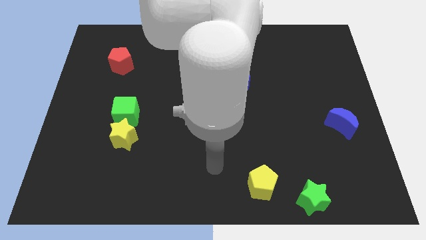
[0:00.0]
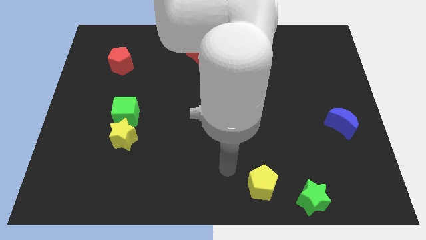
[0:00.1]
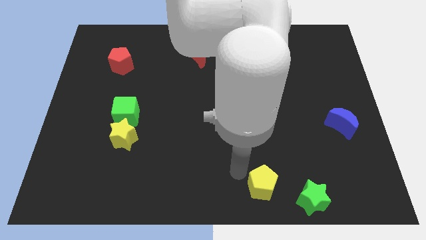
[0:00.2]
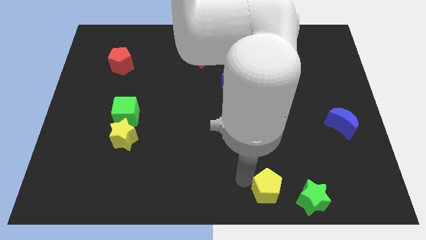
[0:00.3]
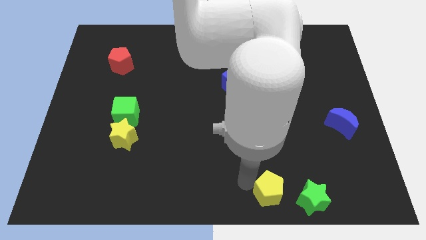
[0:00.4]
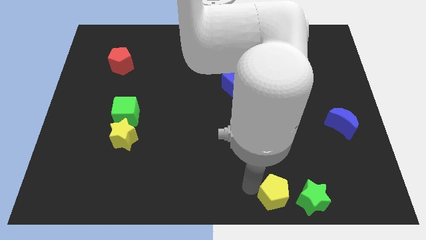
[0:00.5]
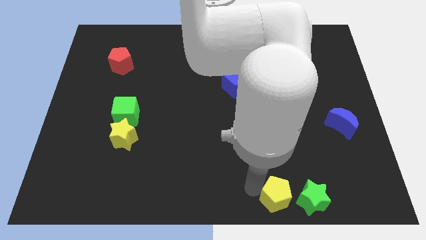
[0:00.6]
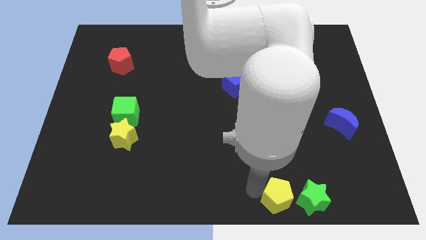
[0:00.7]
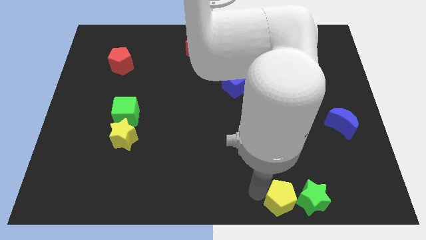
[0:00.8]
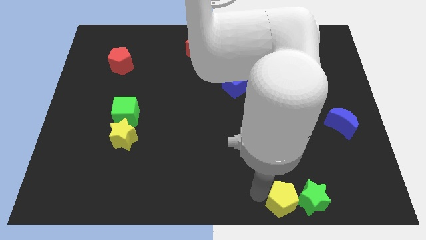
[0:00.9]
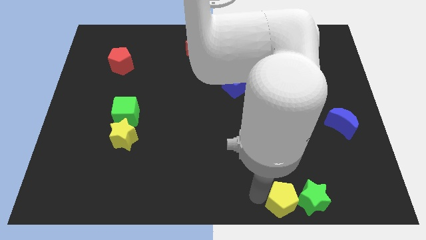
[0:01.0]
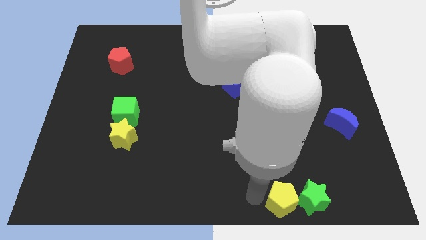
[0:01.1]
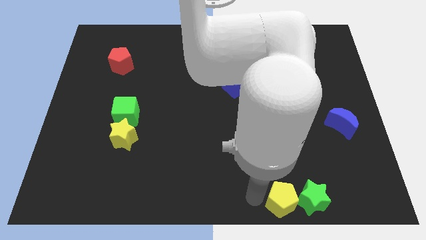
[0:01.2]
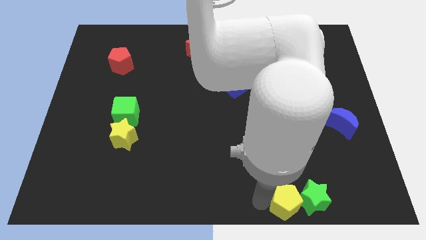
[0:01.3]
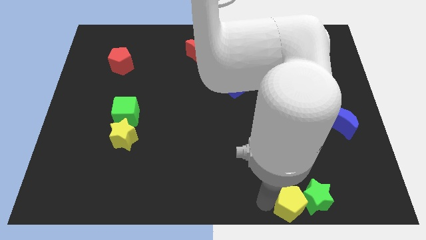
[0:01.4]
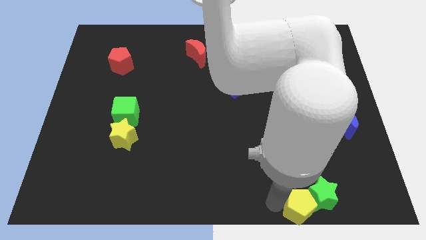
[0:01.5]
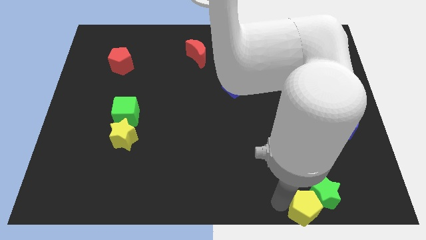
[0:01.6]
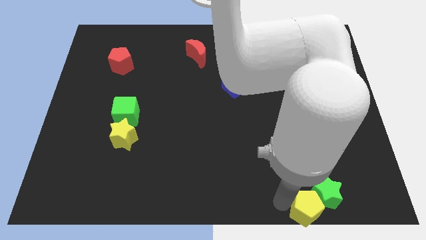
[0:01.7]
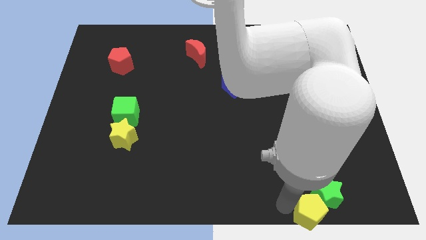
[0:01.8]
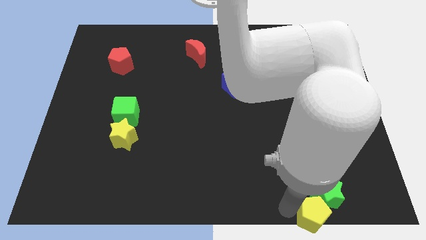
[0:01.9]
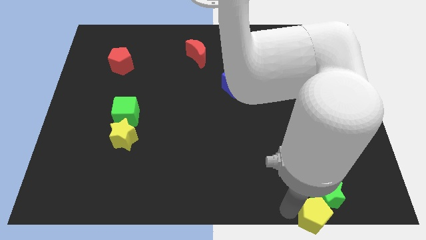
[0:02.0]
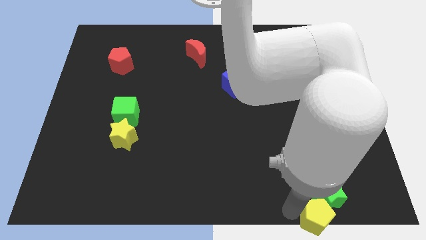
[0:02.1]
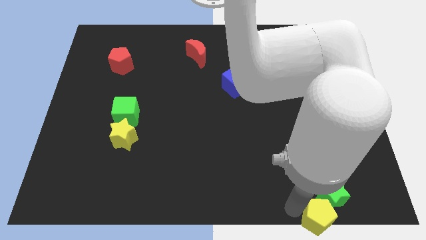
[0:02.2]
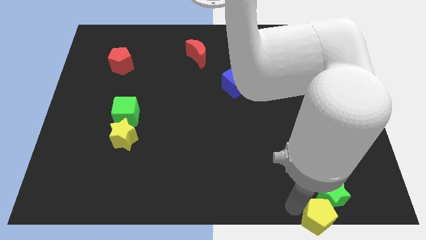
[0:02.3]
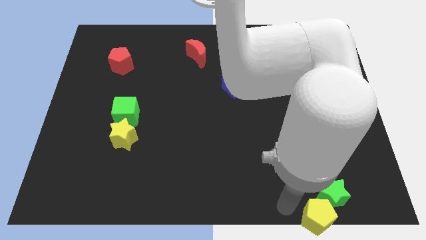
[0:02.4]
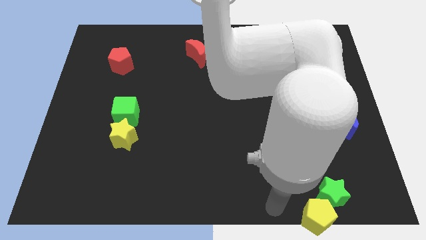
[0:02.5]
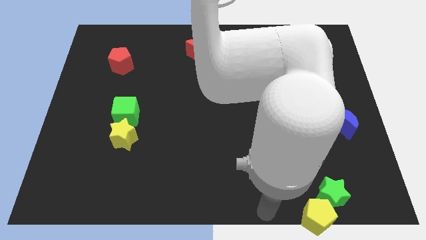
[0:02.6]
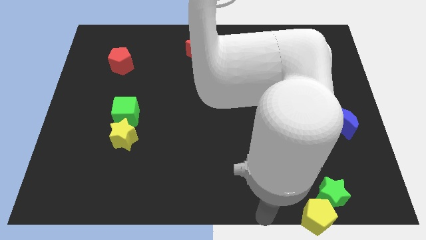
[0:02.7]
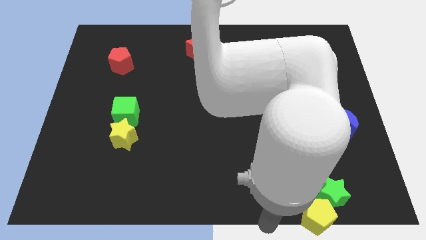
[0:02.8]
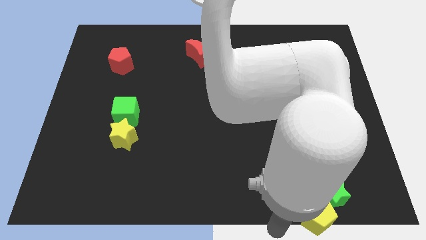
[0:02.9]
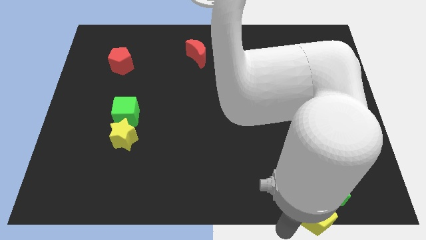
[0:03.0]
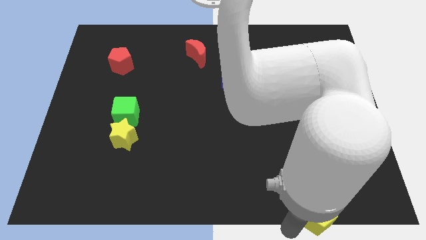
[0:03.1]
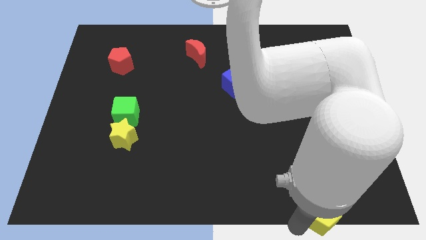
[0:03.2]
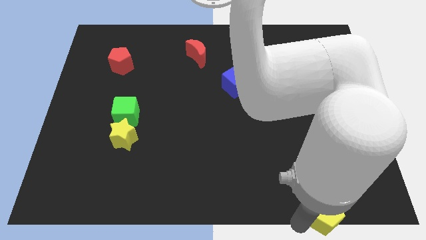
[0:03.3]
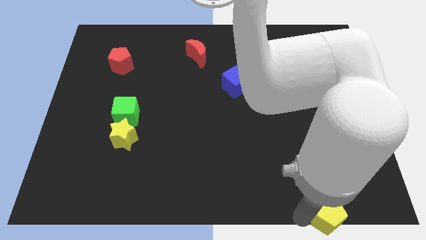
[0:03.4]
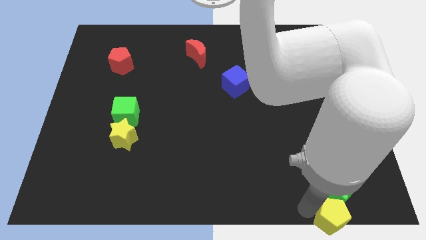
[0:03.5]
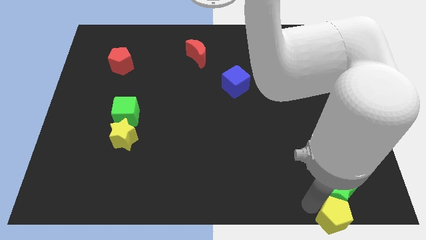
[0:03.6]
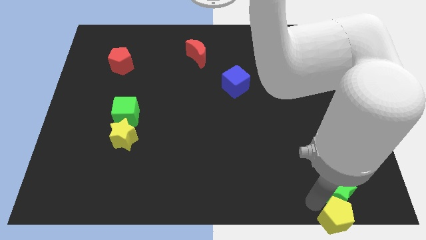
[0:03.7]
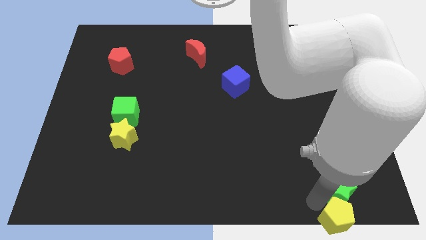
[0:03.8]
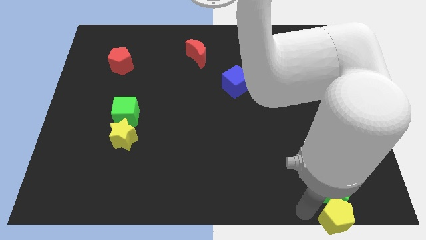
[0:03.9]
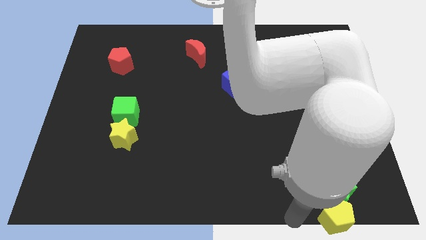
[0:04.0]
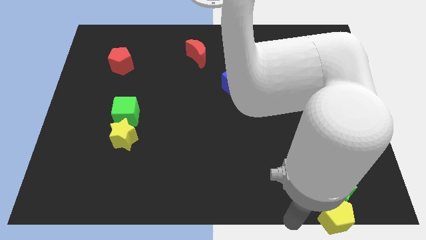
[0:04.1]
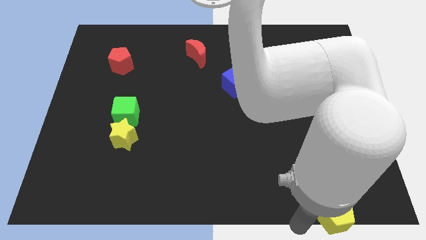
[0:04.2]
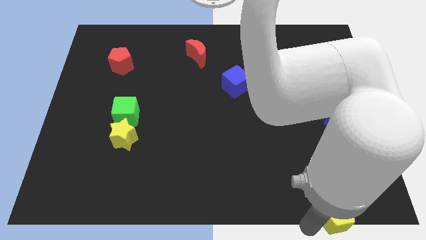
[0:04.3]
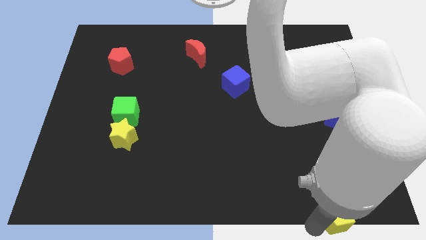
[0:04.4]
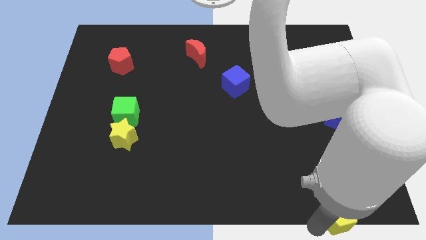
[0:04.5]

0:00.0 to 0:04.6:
place yellow pentagon to the bottom of green star

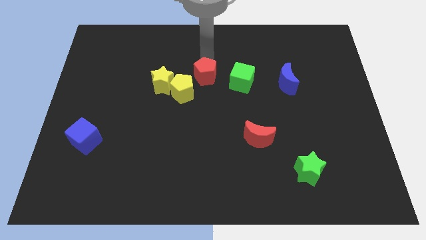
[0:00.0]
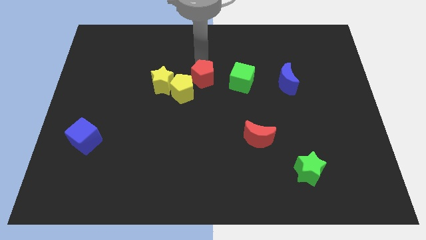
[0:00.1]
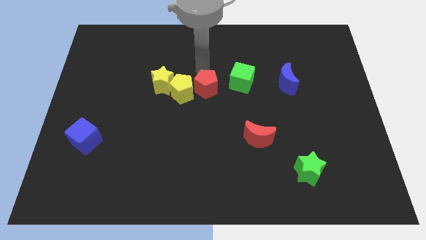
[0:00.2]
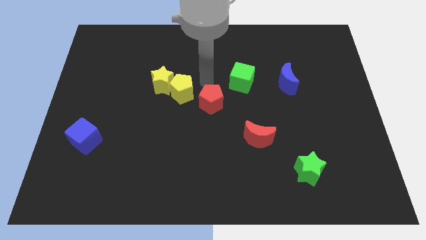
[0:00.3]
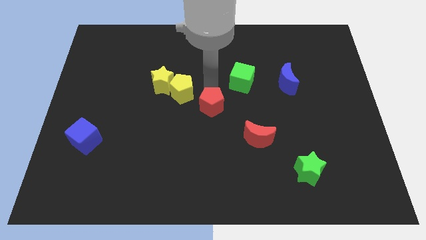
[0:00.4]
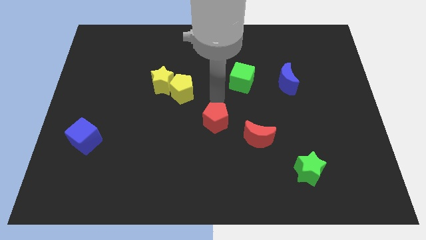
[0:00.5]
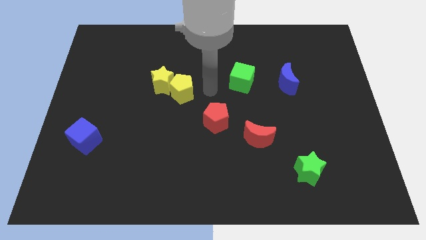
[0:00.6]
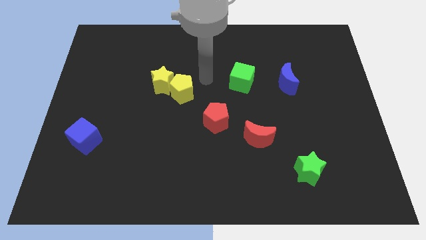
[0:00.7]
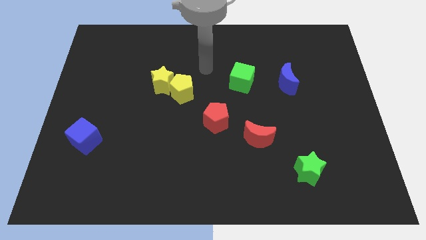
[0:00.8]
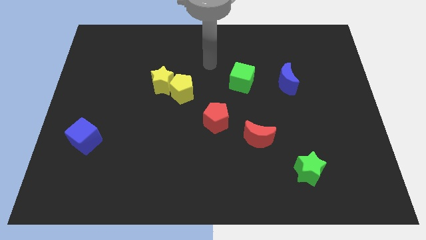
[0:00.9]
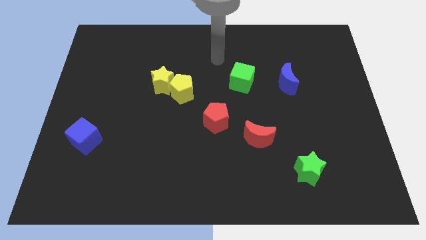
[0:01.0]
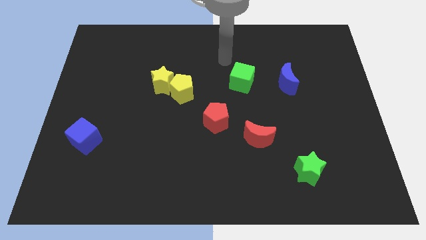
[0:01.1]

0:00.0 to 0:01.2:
slide the red pentagon to the top left side of the red moon

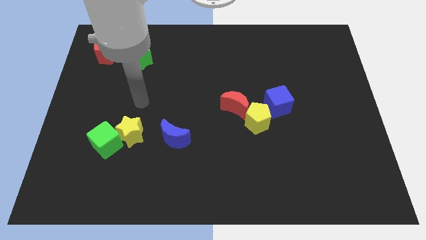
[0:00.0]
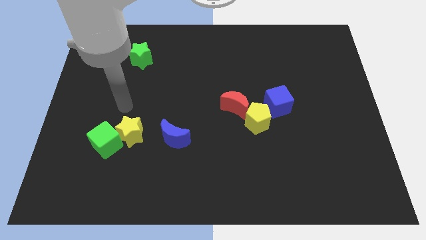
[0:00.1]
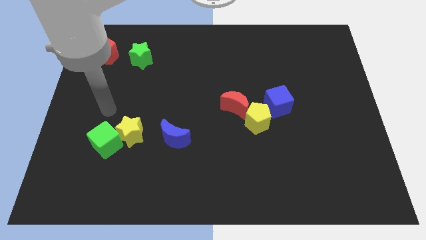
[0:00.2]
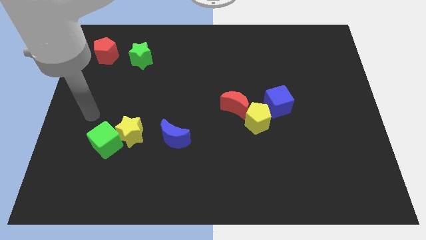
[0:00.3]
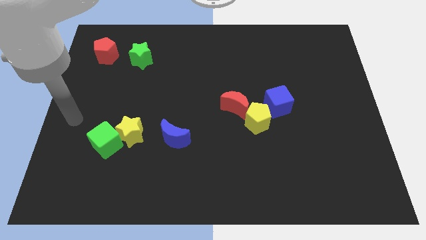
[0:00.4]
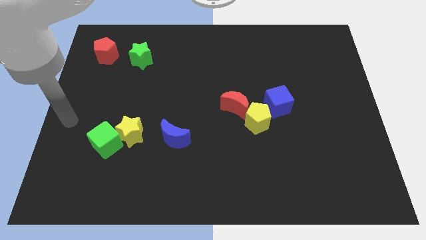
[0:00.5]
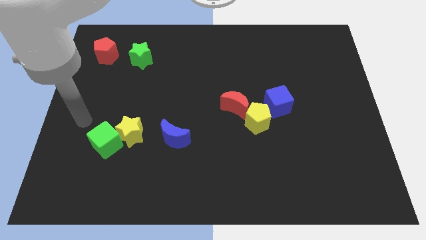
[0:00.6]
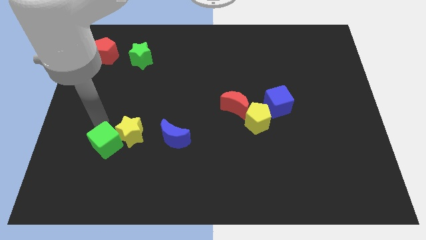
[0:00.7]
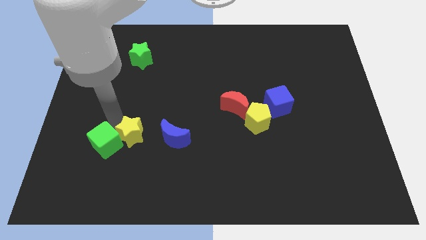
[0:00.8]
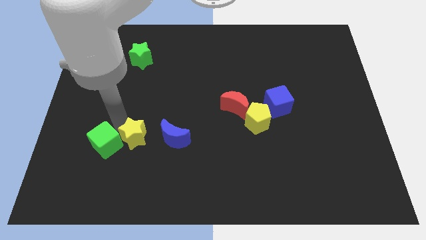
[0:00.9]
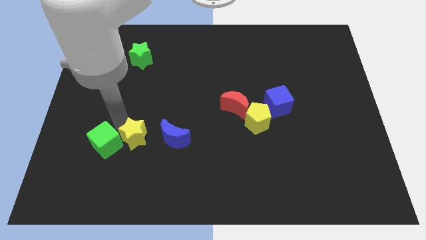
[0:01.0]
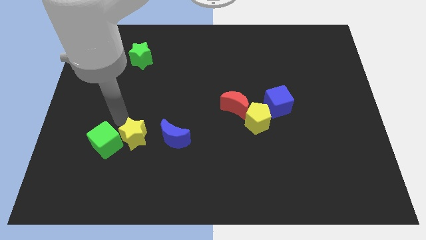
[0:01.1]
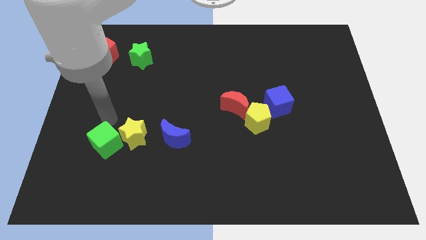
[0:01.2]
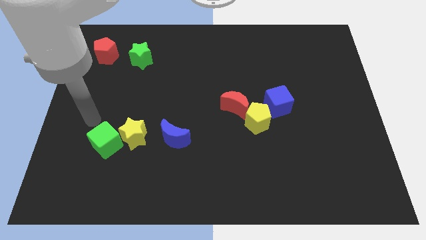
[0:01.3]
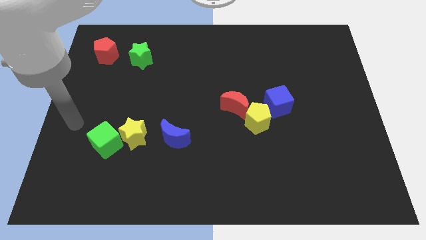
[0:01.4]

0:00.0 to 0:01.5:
tap yellow star on top

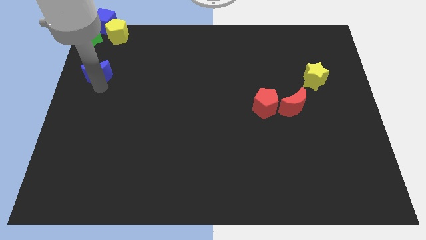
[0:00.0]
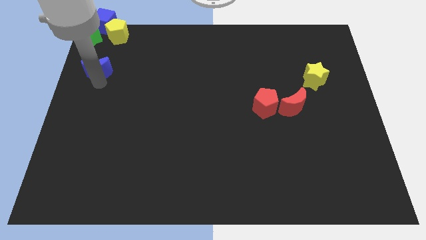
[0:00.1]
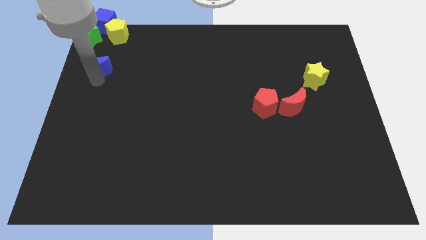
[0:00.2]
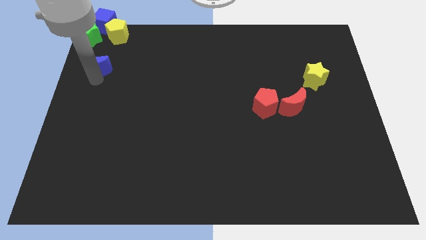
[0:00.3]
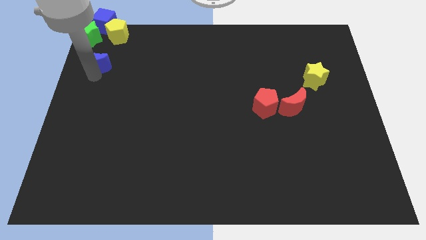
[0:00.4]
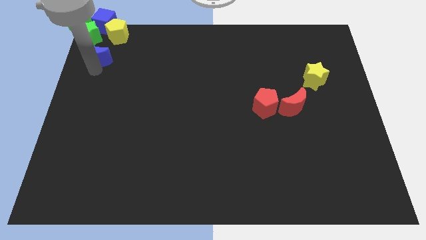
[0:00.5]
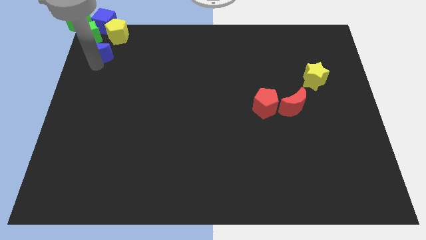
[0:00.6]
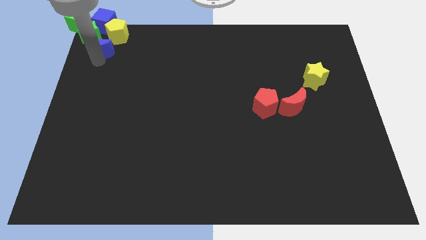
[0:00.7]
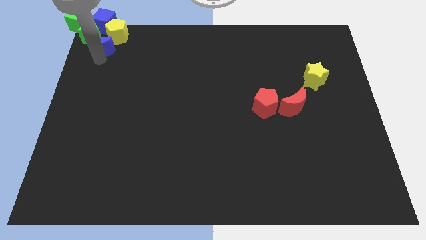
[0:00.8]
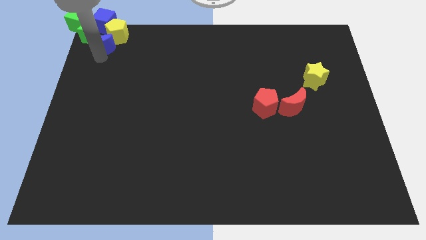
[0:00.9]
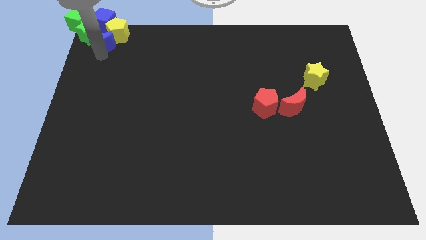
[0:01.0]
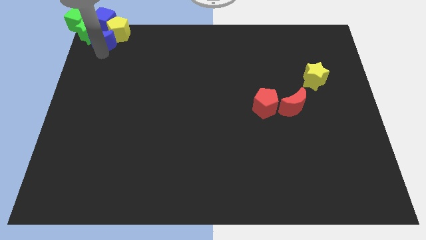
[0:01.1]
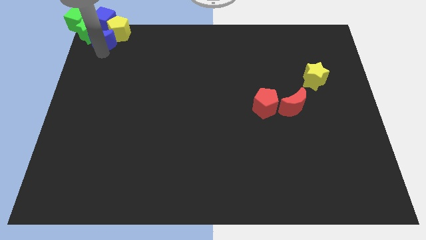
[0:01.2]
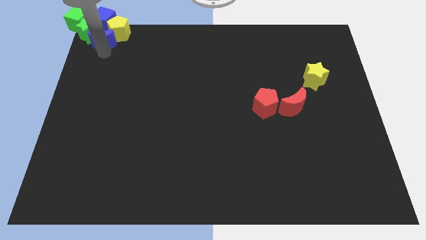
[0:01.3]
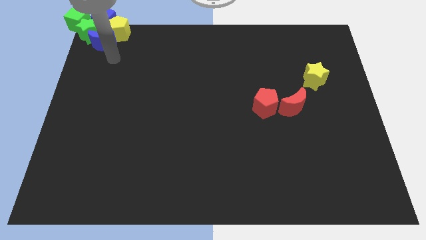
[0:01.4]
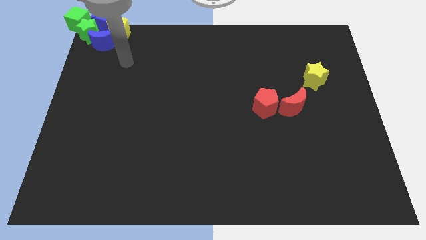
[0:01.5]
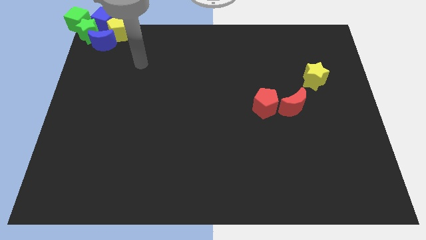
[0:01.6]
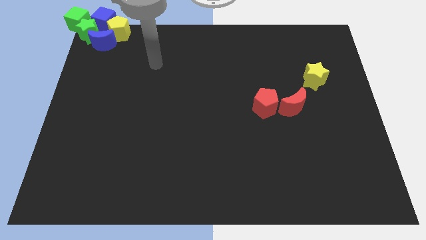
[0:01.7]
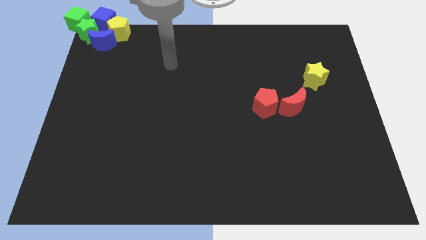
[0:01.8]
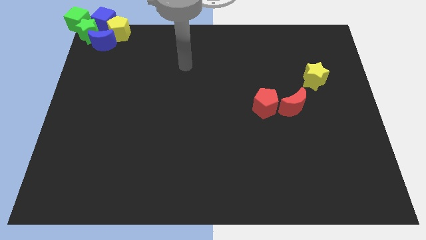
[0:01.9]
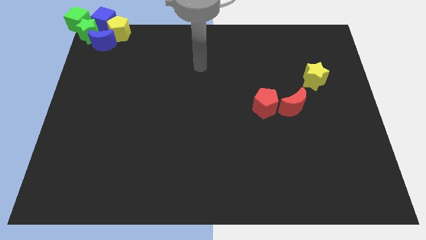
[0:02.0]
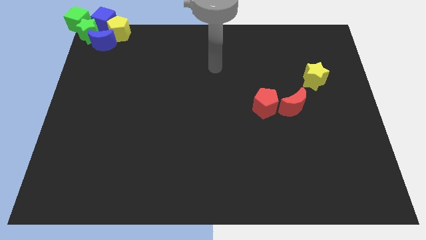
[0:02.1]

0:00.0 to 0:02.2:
move the blue crescent to the bottom of the green star and yellow pentagon
